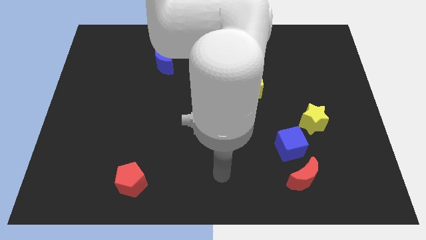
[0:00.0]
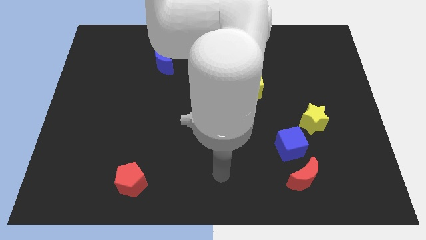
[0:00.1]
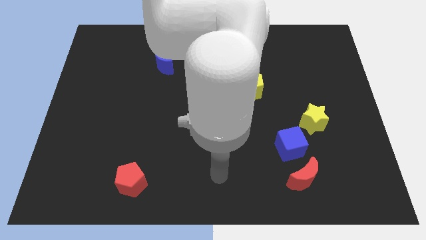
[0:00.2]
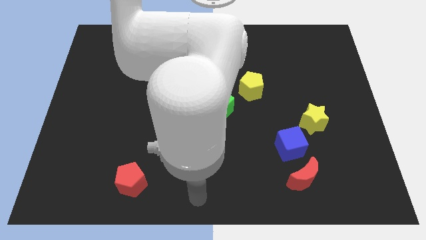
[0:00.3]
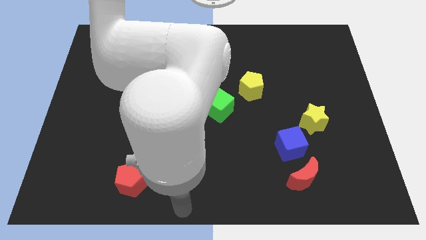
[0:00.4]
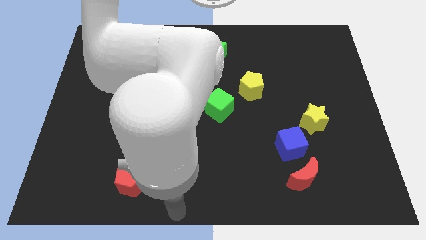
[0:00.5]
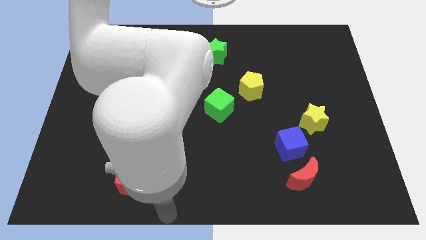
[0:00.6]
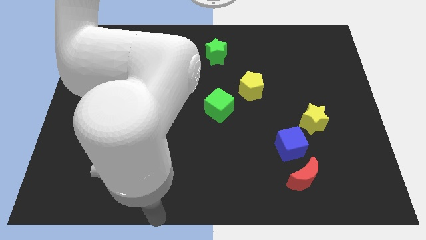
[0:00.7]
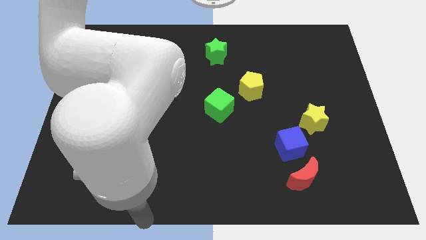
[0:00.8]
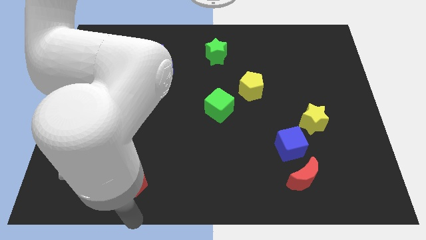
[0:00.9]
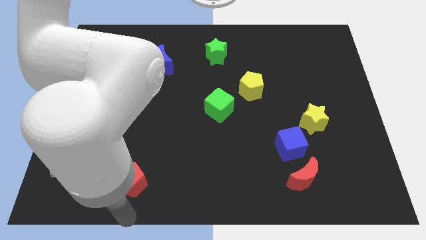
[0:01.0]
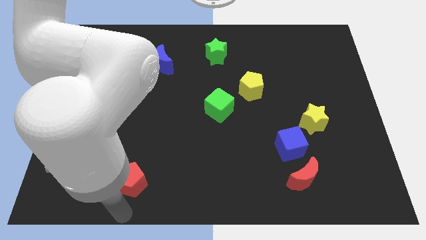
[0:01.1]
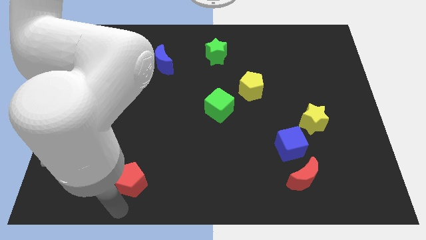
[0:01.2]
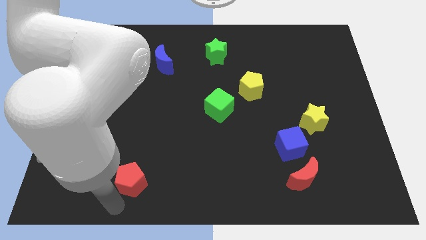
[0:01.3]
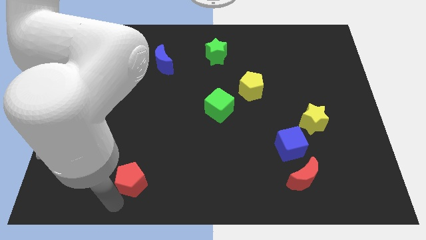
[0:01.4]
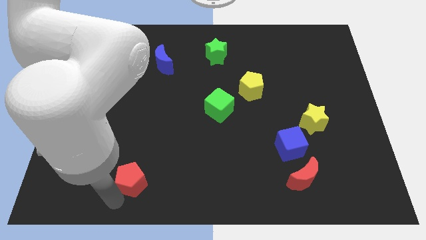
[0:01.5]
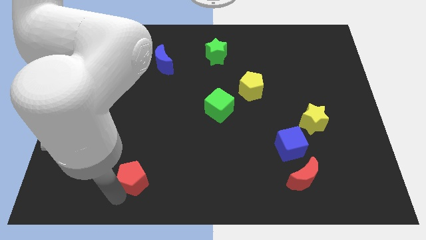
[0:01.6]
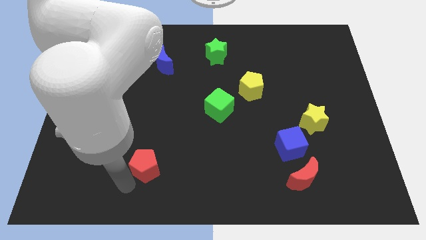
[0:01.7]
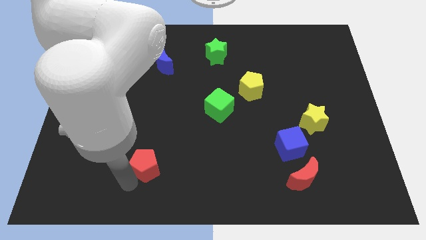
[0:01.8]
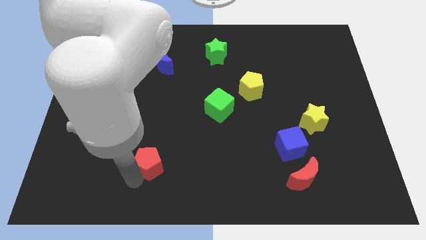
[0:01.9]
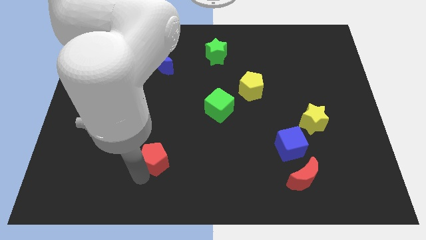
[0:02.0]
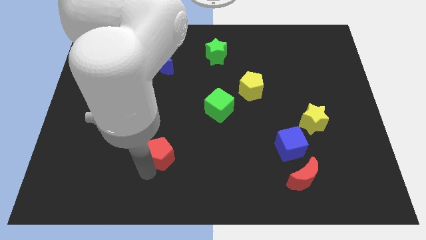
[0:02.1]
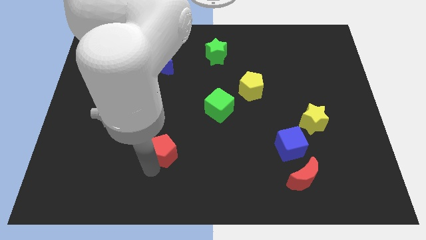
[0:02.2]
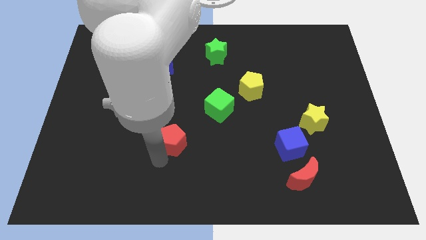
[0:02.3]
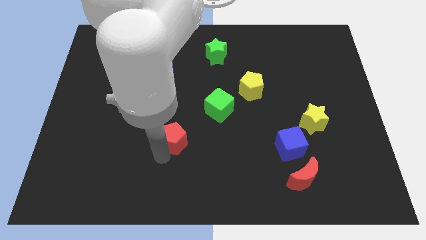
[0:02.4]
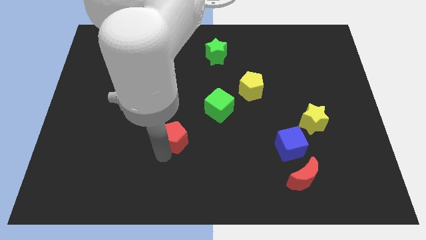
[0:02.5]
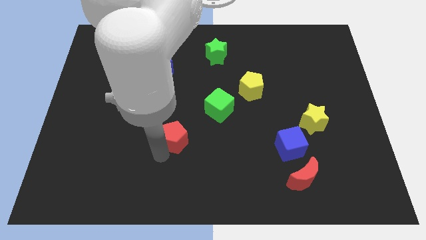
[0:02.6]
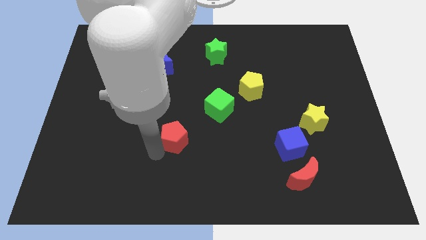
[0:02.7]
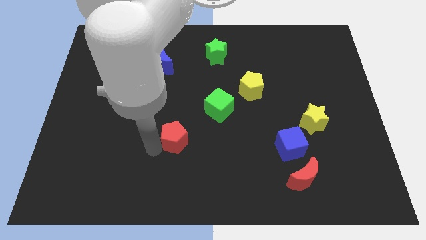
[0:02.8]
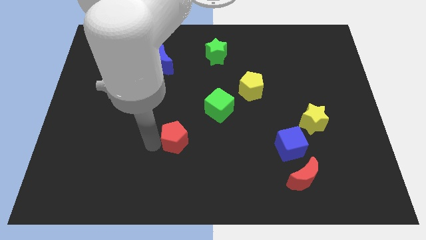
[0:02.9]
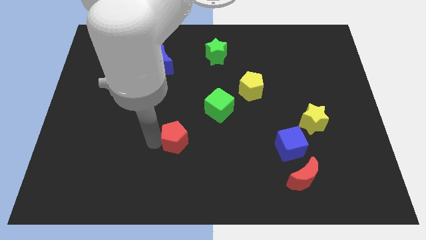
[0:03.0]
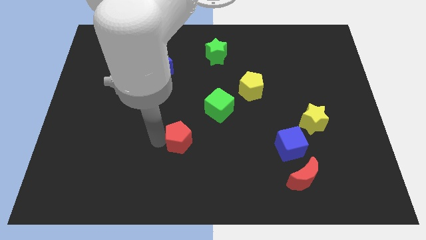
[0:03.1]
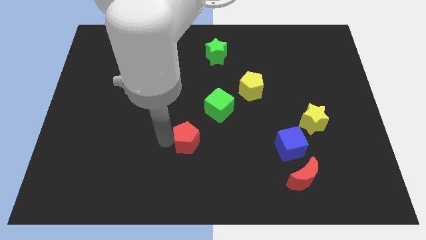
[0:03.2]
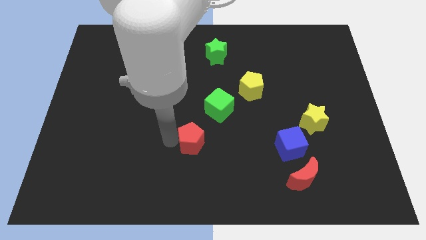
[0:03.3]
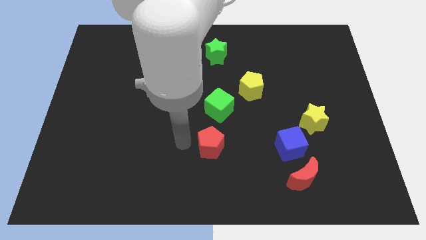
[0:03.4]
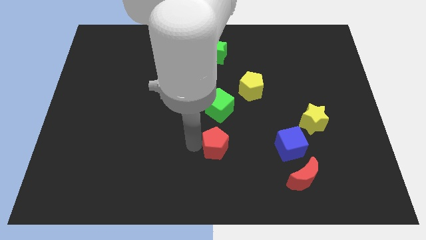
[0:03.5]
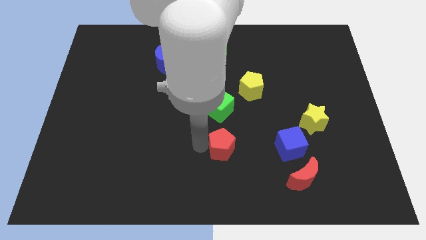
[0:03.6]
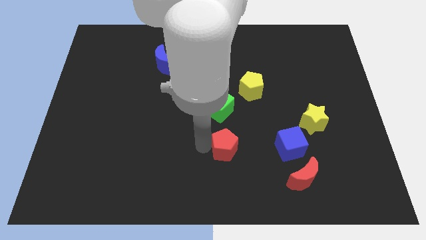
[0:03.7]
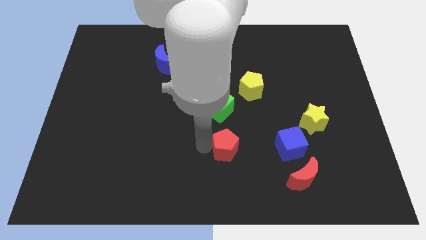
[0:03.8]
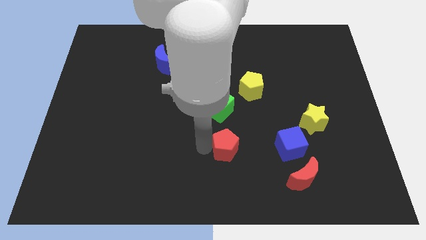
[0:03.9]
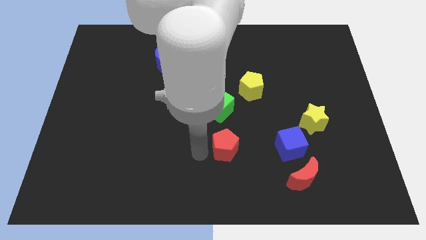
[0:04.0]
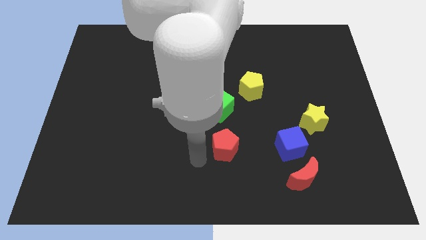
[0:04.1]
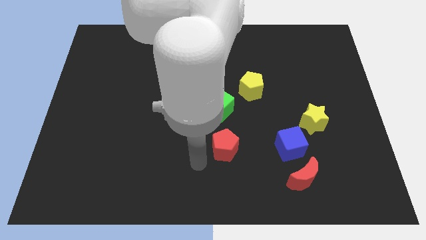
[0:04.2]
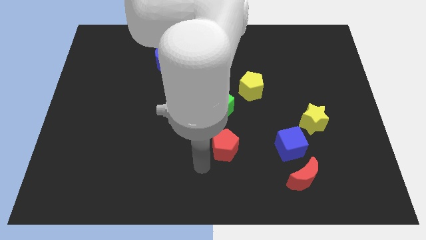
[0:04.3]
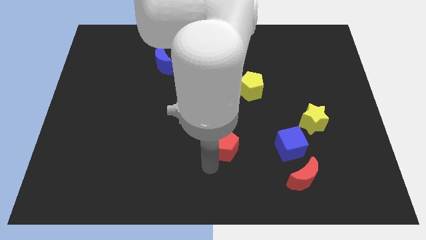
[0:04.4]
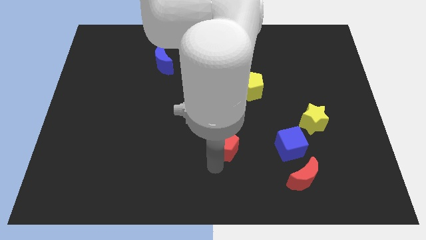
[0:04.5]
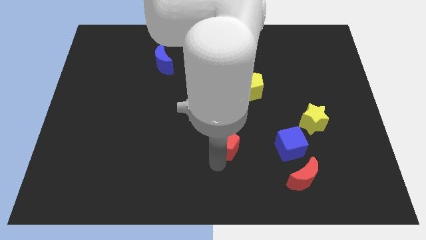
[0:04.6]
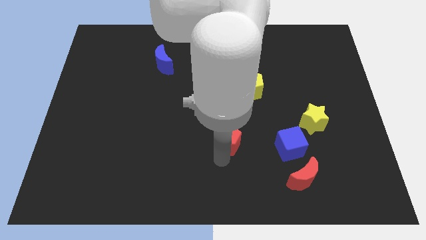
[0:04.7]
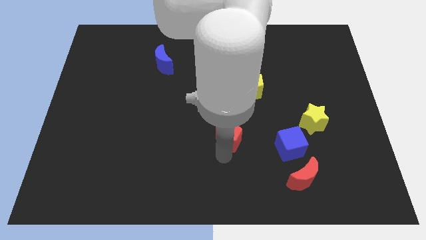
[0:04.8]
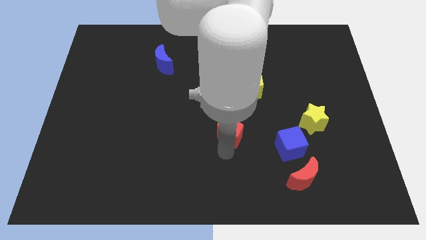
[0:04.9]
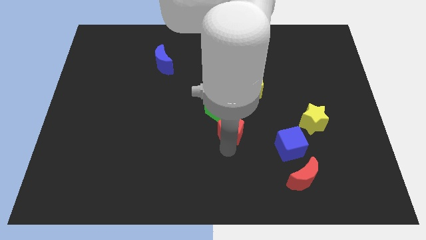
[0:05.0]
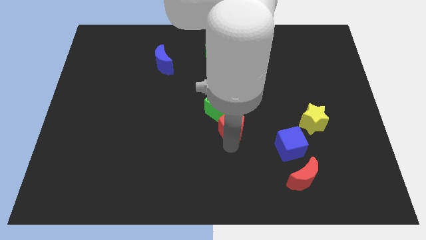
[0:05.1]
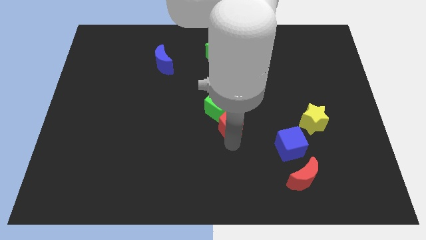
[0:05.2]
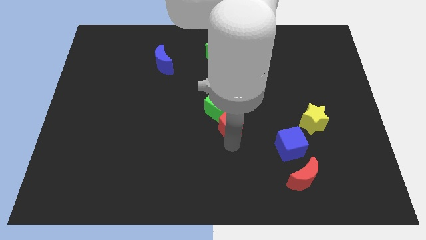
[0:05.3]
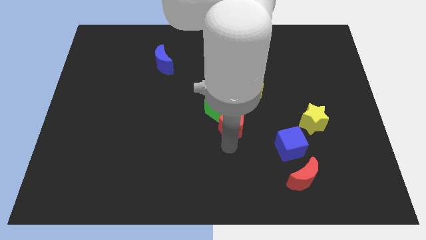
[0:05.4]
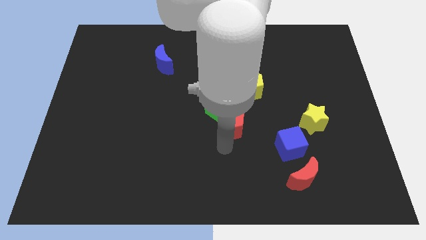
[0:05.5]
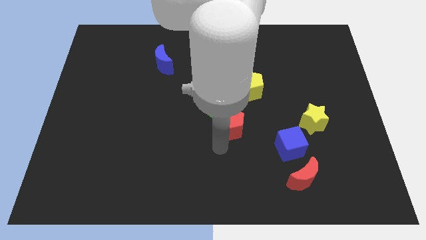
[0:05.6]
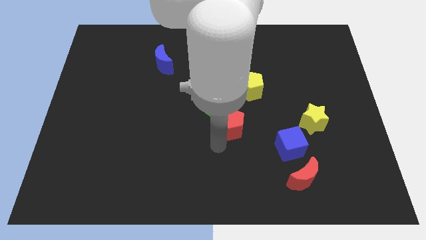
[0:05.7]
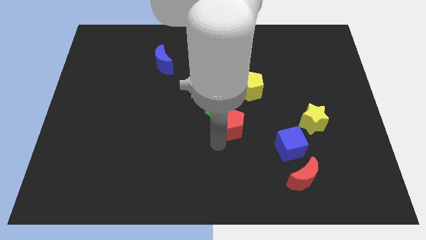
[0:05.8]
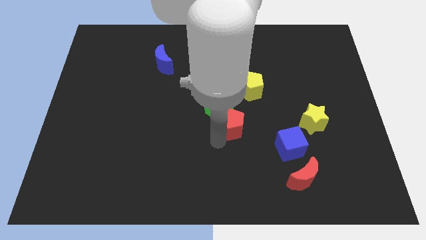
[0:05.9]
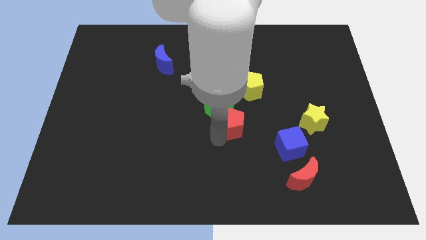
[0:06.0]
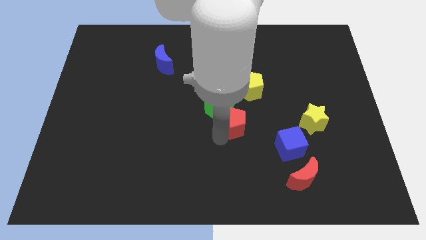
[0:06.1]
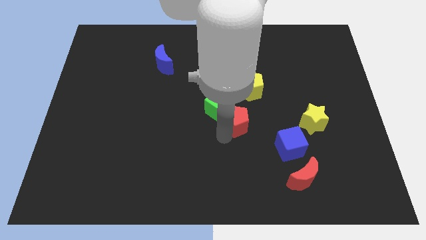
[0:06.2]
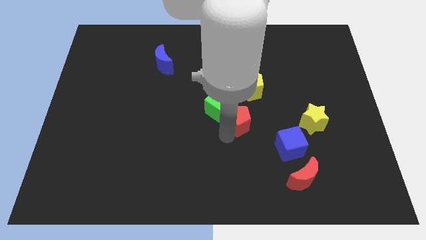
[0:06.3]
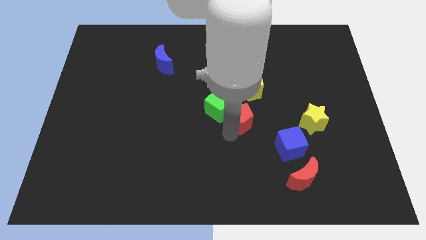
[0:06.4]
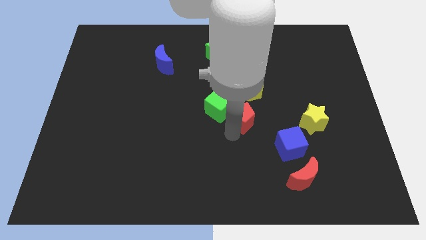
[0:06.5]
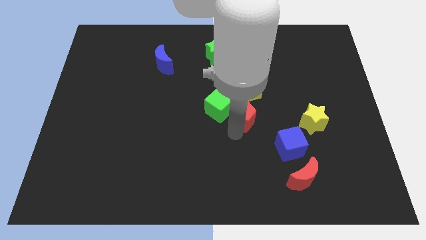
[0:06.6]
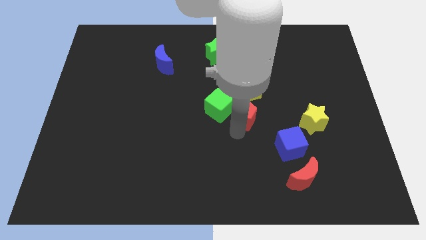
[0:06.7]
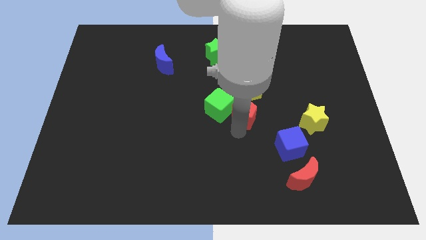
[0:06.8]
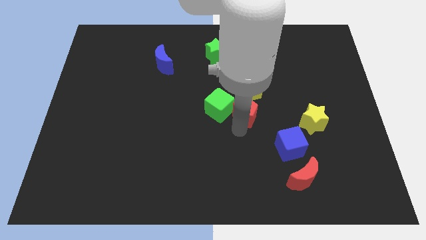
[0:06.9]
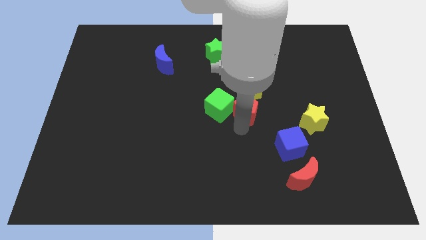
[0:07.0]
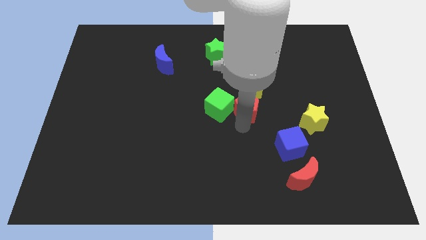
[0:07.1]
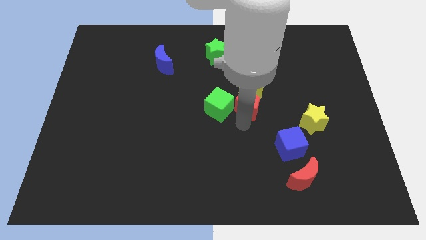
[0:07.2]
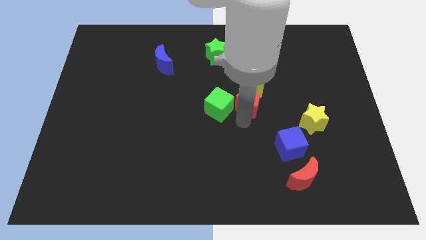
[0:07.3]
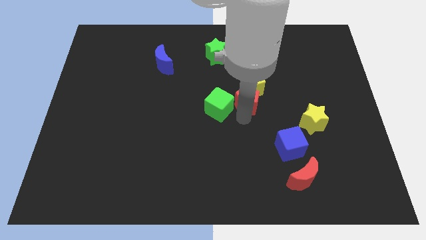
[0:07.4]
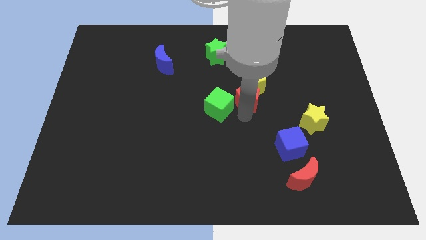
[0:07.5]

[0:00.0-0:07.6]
move the red pentagon close to the yellow pentagon

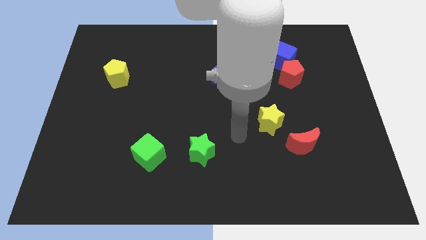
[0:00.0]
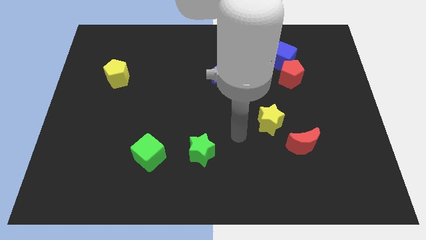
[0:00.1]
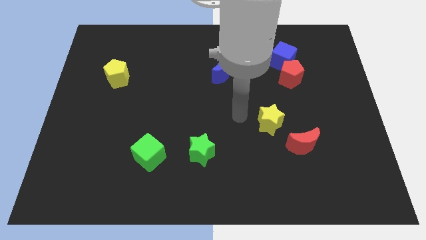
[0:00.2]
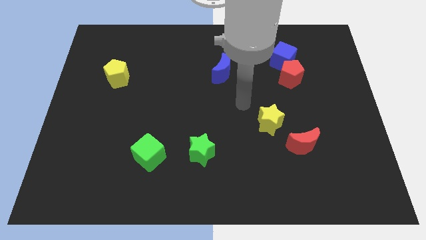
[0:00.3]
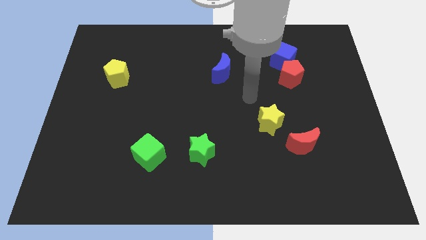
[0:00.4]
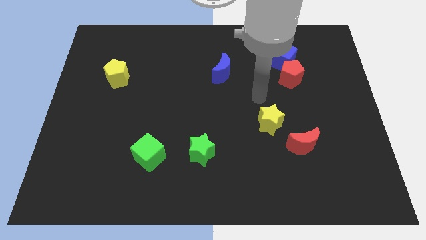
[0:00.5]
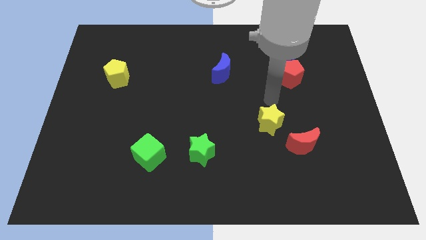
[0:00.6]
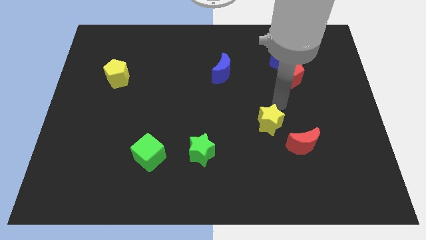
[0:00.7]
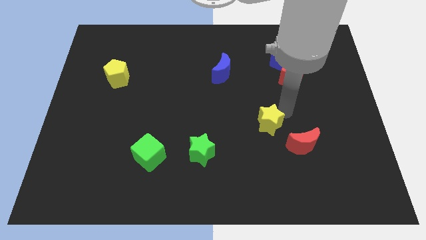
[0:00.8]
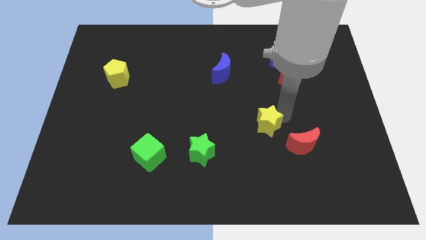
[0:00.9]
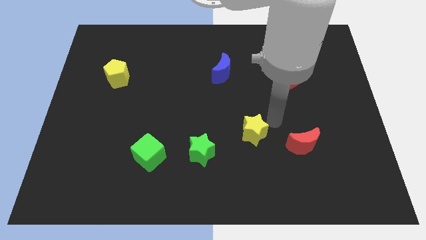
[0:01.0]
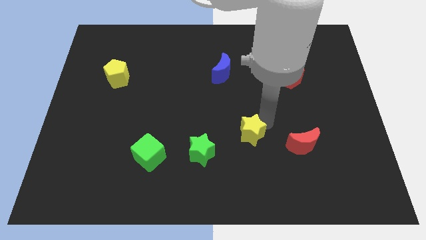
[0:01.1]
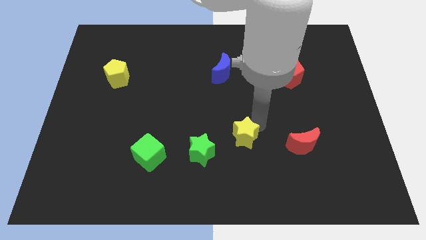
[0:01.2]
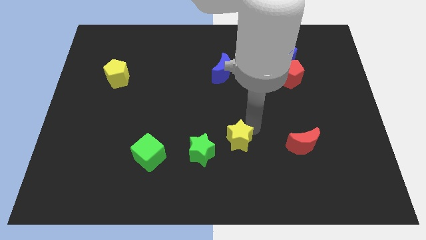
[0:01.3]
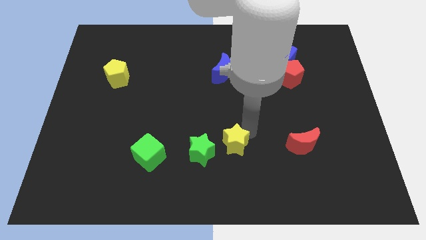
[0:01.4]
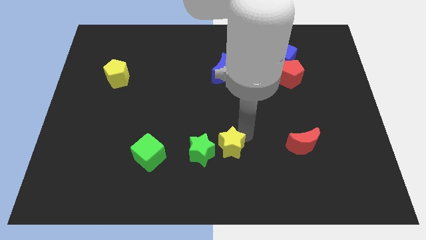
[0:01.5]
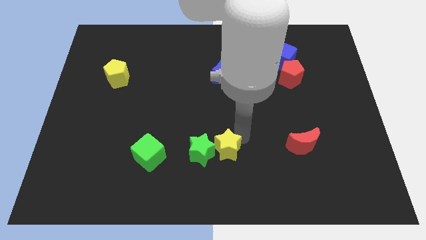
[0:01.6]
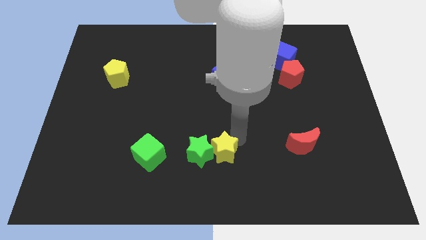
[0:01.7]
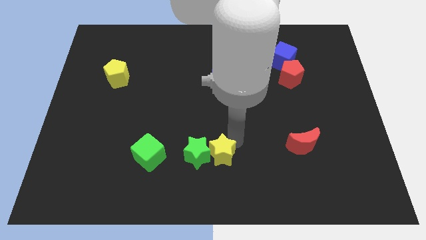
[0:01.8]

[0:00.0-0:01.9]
put the yellow star to the green star
